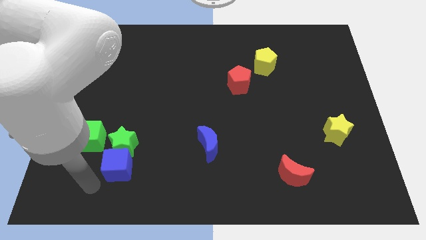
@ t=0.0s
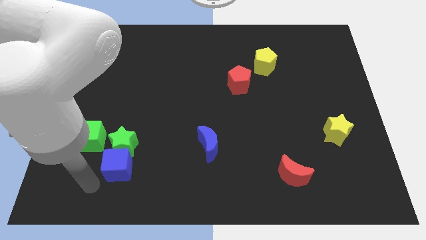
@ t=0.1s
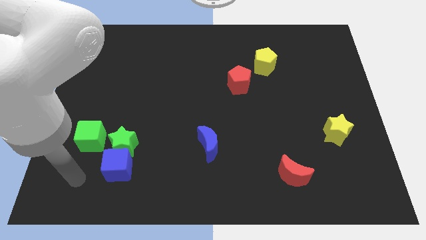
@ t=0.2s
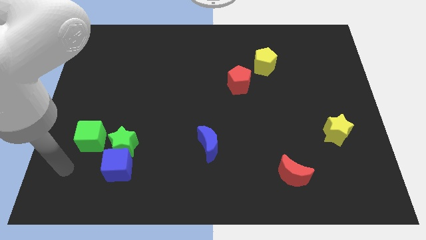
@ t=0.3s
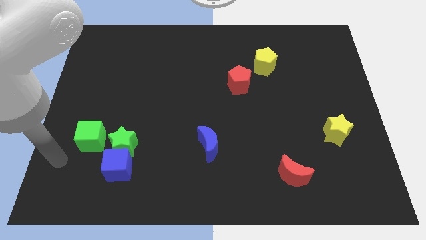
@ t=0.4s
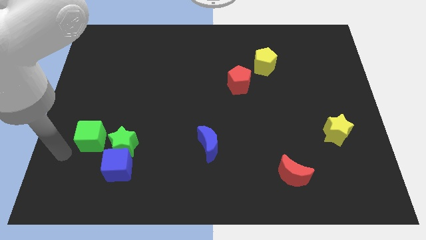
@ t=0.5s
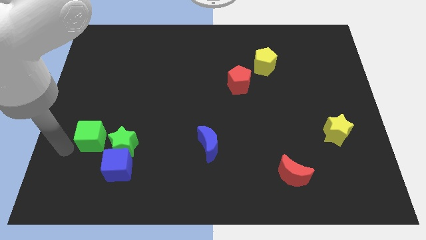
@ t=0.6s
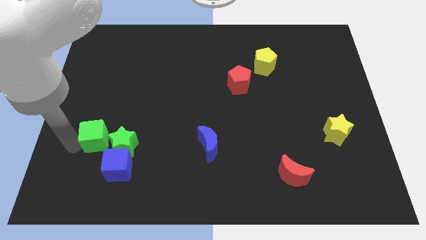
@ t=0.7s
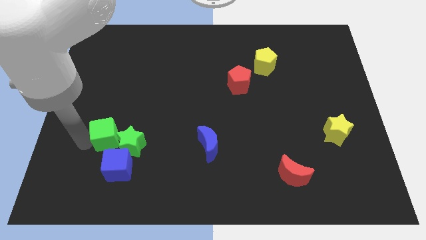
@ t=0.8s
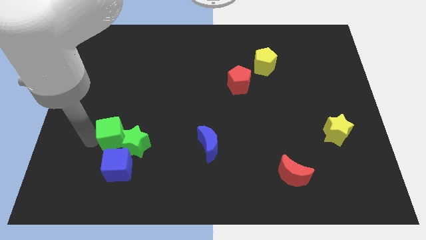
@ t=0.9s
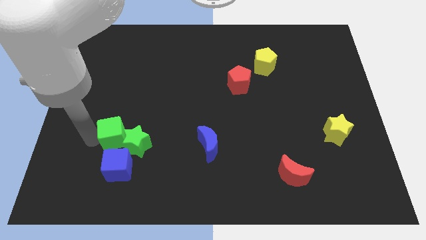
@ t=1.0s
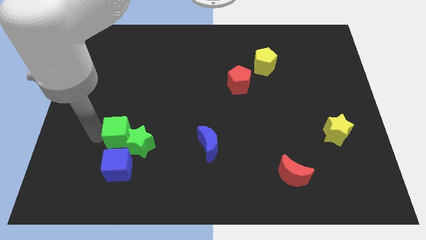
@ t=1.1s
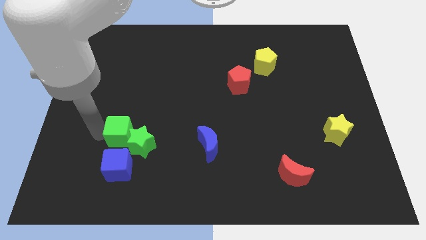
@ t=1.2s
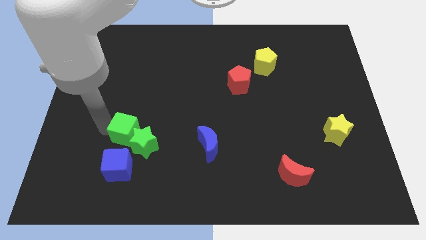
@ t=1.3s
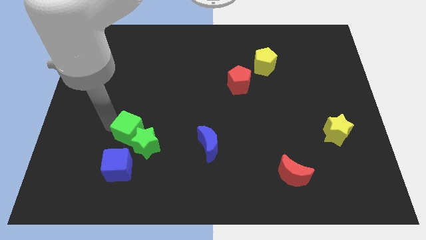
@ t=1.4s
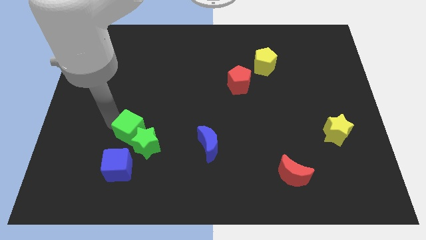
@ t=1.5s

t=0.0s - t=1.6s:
push the green cube into the green star

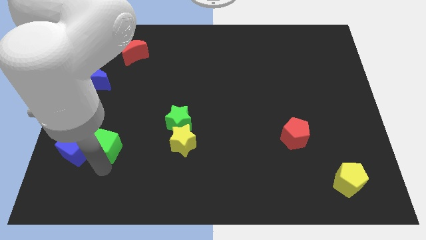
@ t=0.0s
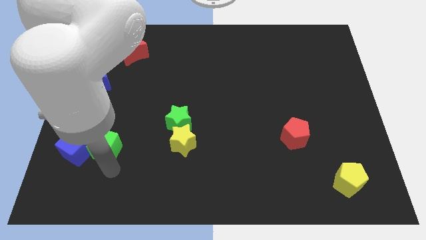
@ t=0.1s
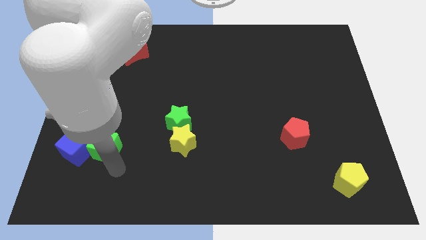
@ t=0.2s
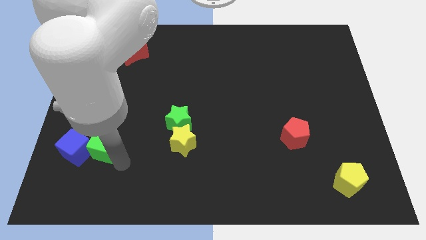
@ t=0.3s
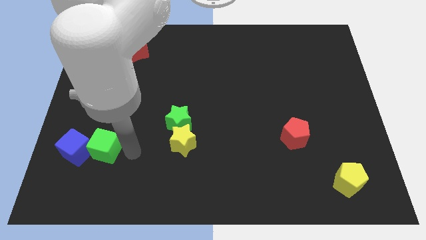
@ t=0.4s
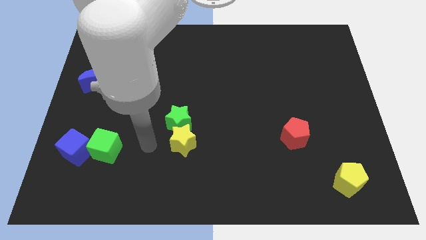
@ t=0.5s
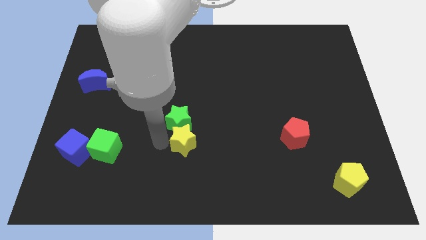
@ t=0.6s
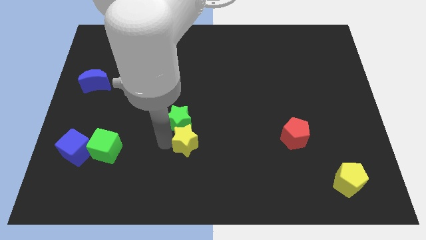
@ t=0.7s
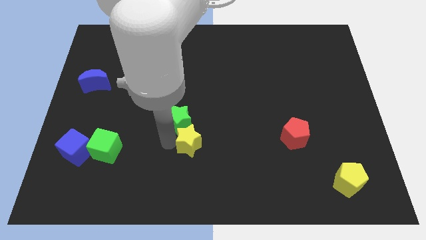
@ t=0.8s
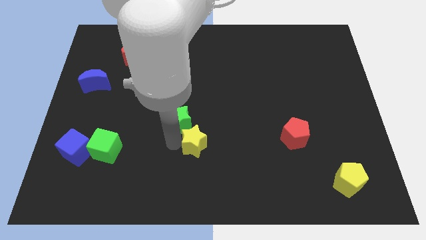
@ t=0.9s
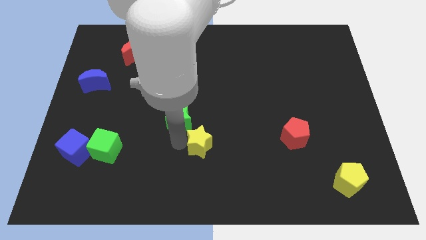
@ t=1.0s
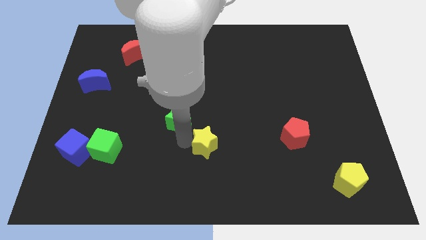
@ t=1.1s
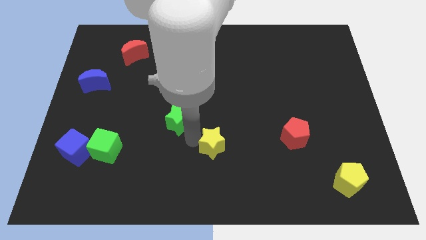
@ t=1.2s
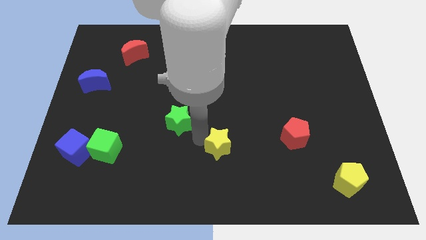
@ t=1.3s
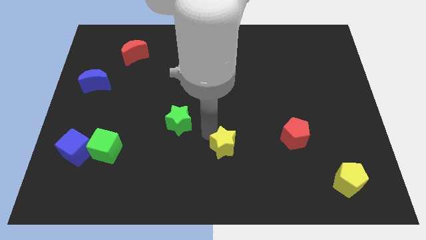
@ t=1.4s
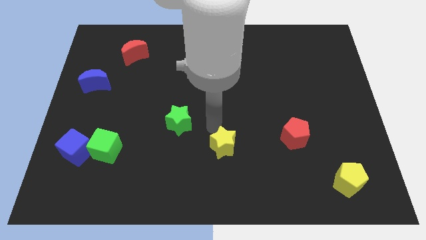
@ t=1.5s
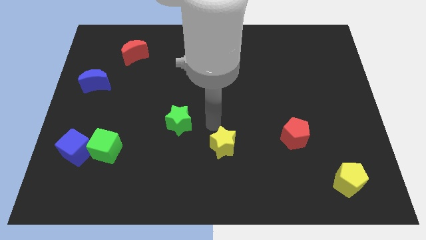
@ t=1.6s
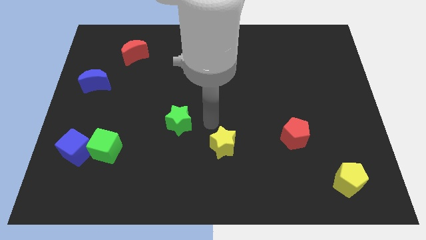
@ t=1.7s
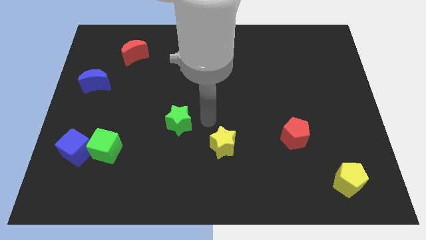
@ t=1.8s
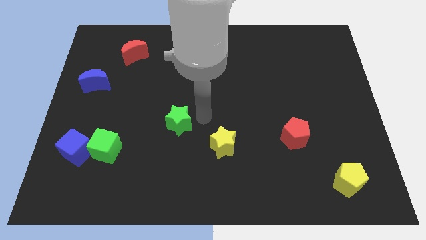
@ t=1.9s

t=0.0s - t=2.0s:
move the yellow star to the center side

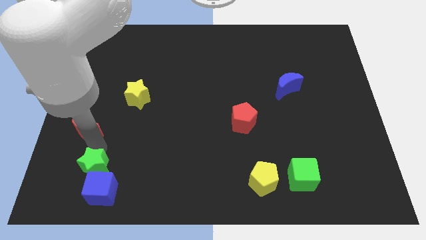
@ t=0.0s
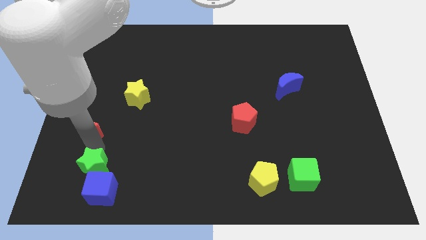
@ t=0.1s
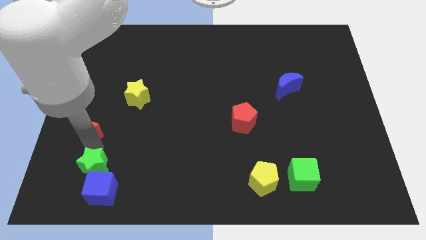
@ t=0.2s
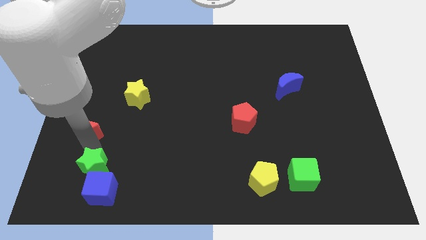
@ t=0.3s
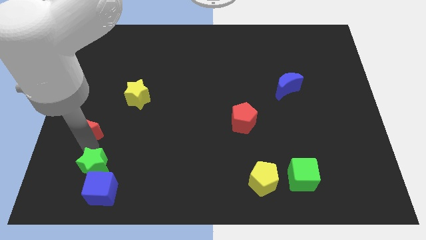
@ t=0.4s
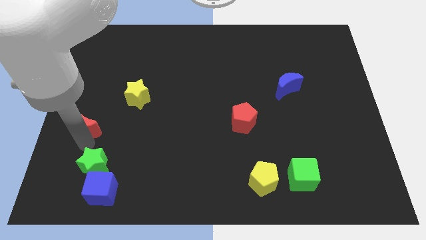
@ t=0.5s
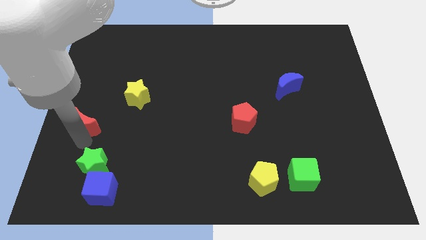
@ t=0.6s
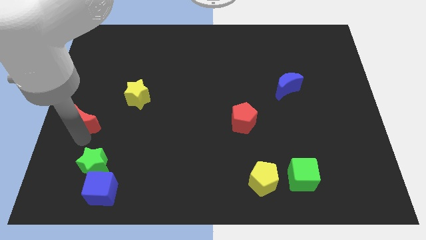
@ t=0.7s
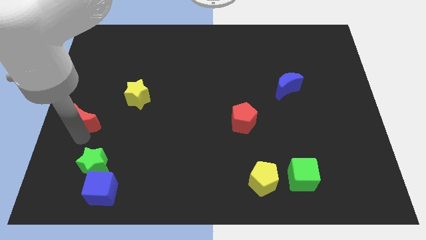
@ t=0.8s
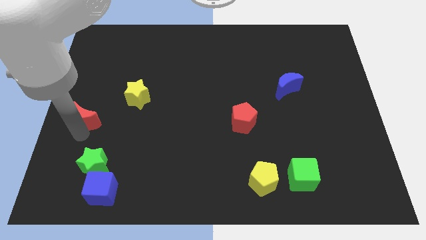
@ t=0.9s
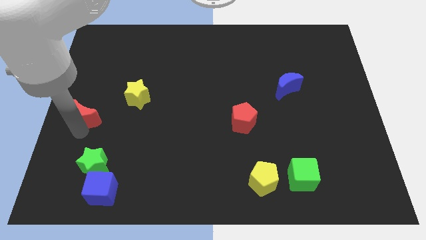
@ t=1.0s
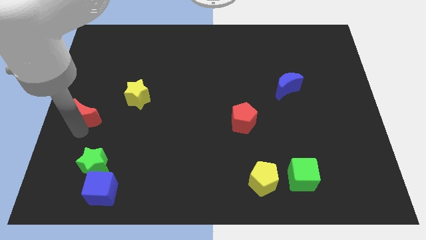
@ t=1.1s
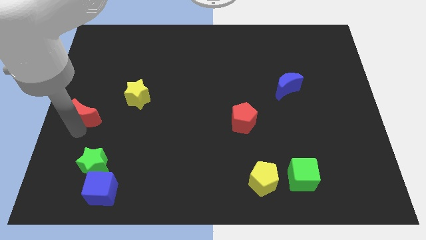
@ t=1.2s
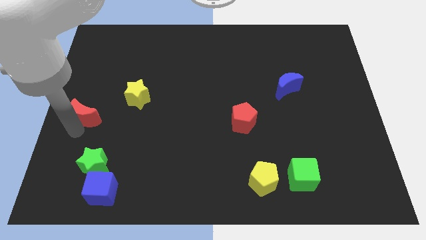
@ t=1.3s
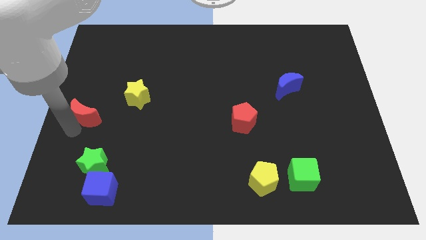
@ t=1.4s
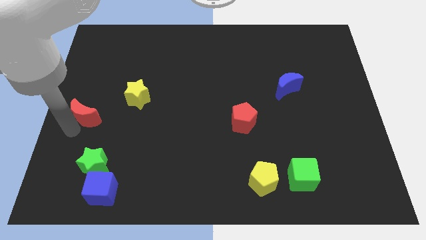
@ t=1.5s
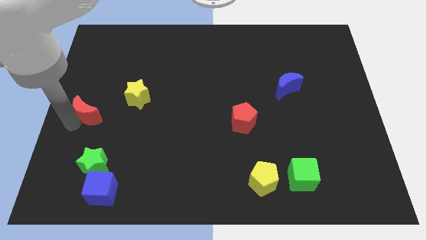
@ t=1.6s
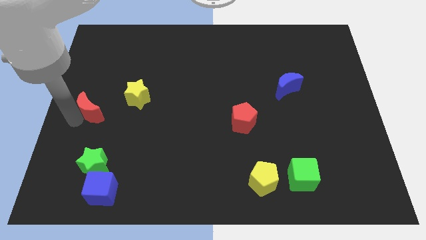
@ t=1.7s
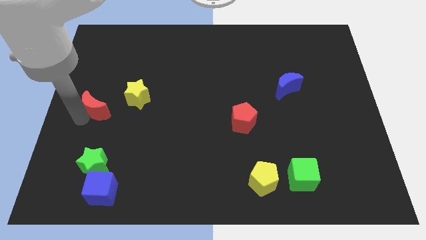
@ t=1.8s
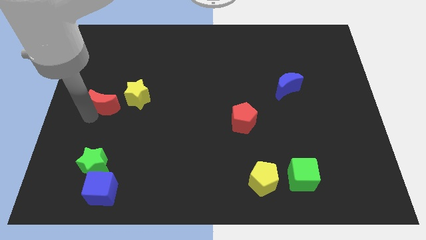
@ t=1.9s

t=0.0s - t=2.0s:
push the red moon close to the yellow star

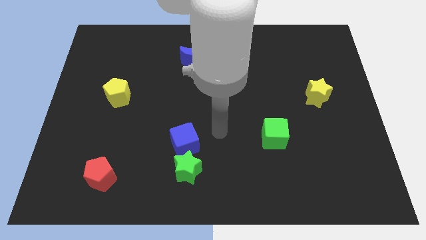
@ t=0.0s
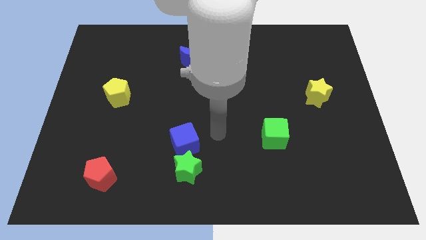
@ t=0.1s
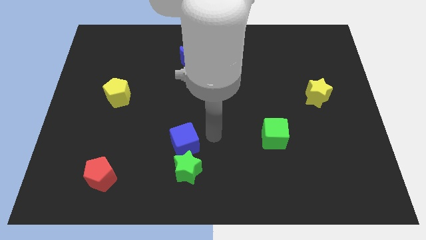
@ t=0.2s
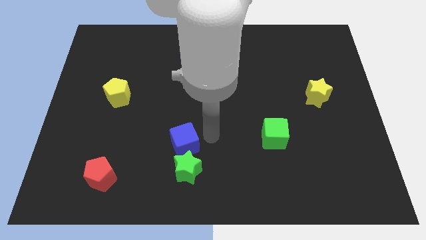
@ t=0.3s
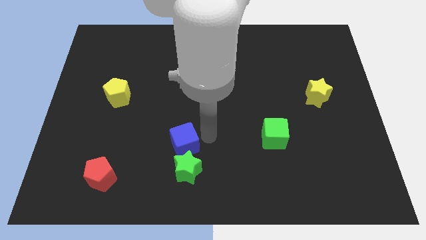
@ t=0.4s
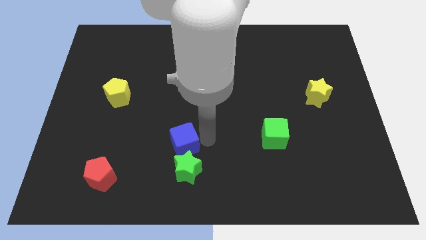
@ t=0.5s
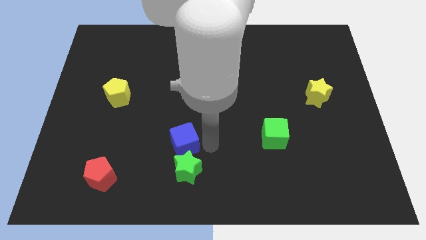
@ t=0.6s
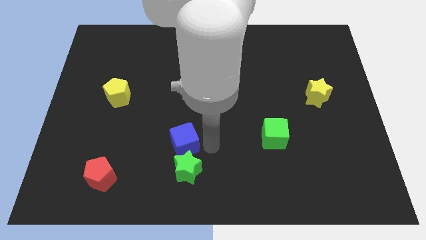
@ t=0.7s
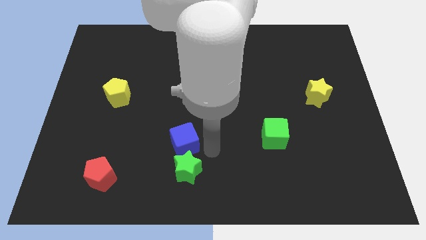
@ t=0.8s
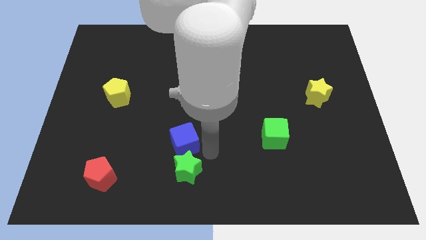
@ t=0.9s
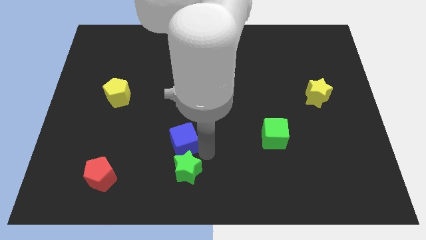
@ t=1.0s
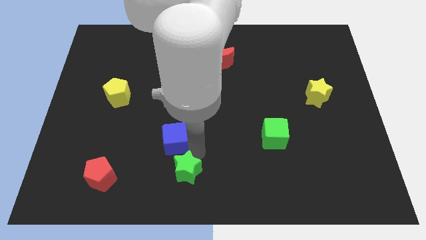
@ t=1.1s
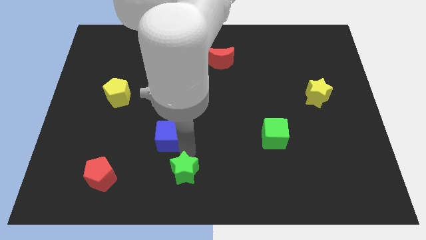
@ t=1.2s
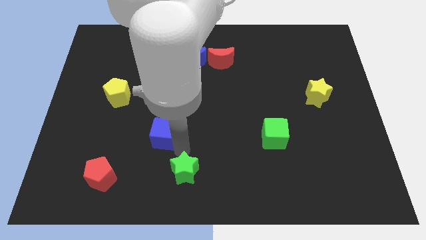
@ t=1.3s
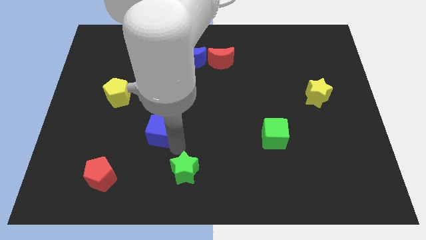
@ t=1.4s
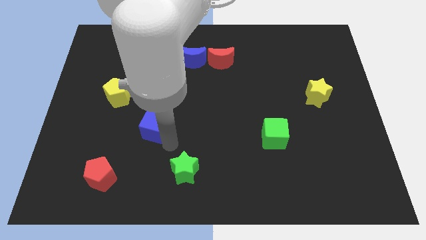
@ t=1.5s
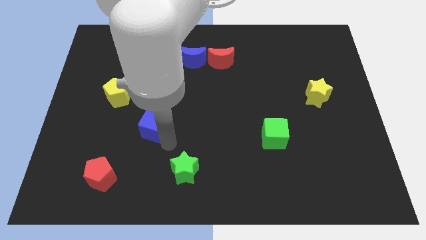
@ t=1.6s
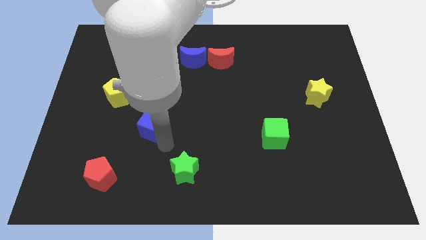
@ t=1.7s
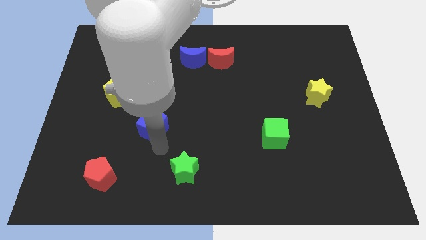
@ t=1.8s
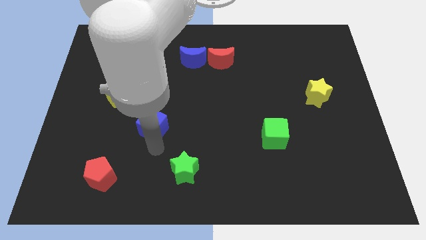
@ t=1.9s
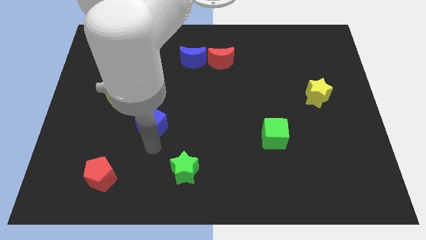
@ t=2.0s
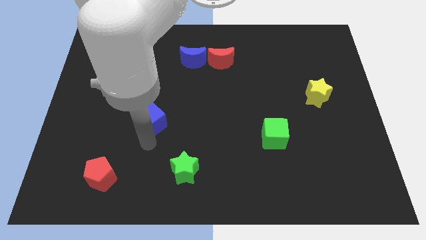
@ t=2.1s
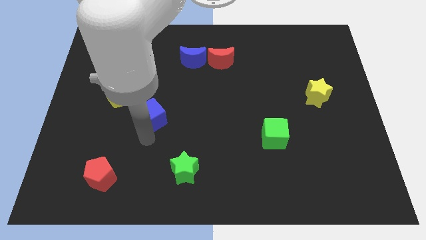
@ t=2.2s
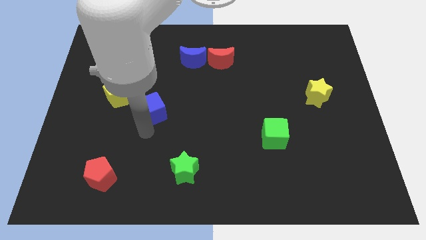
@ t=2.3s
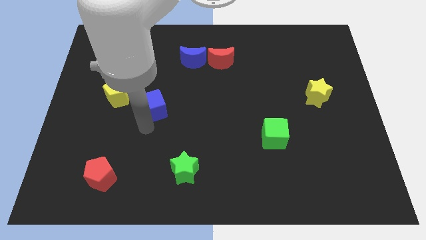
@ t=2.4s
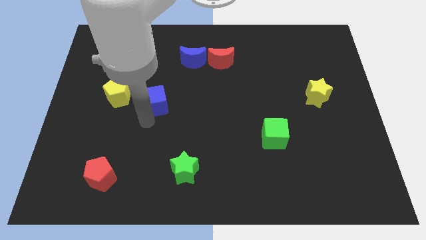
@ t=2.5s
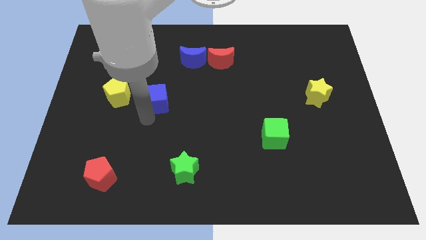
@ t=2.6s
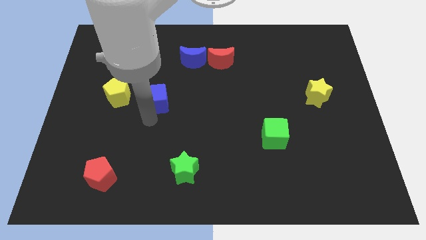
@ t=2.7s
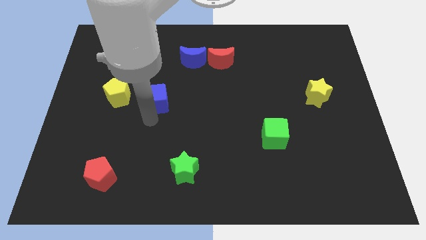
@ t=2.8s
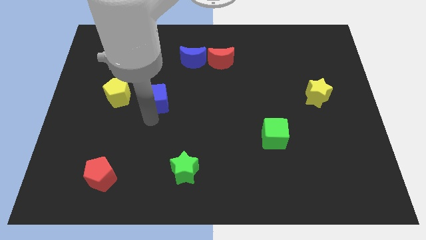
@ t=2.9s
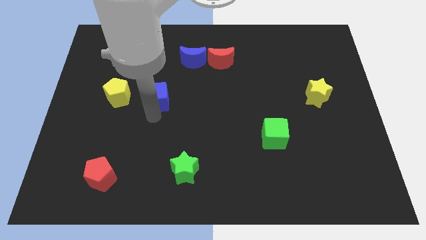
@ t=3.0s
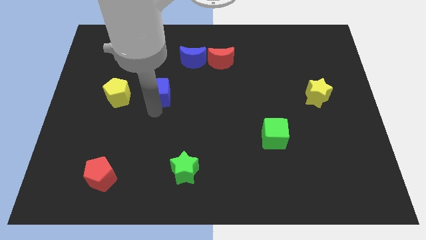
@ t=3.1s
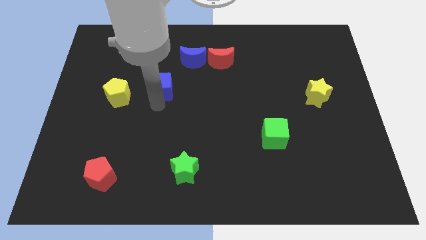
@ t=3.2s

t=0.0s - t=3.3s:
place the blue cube to the right of the yellow pentagon
